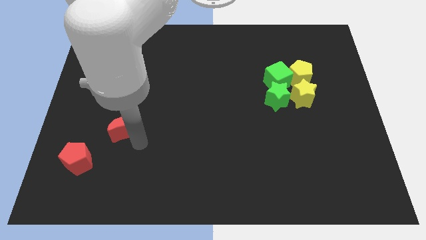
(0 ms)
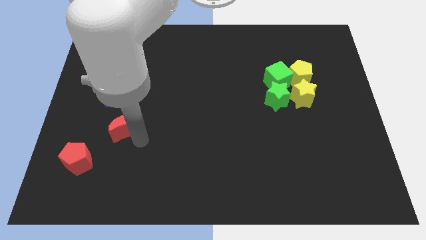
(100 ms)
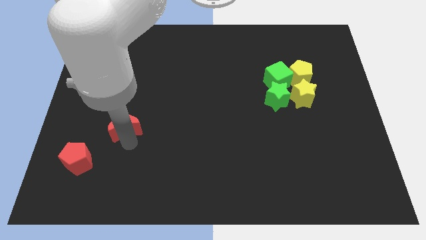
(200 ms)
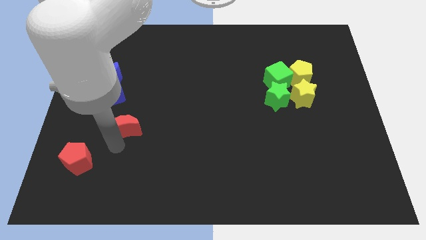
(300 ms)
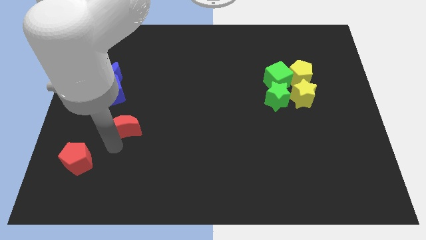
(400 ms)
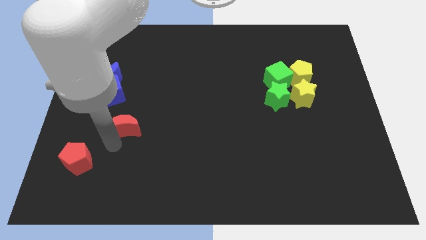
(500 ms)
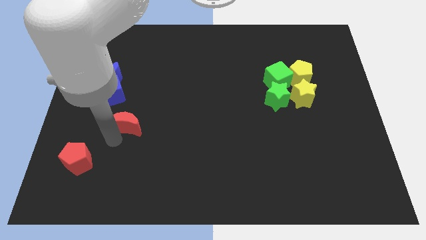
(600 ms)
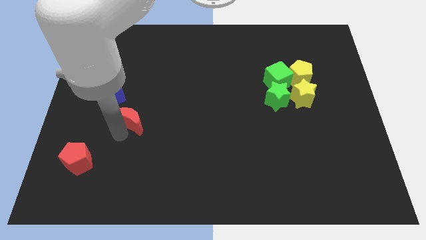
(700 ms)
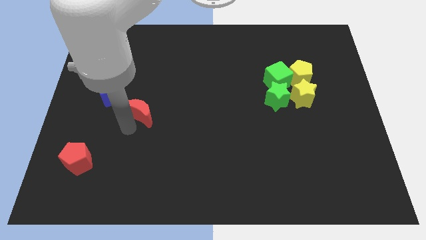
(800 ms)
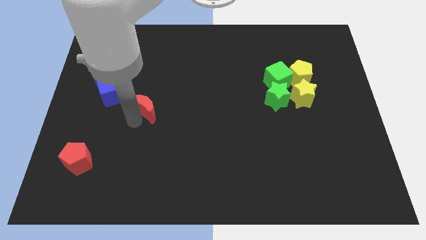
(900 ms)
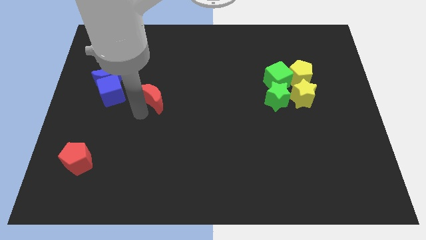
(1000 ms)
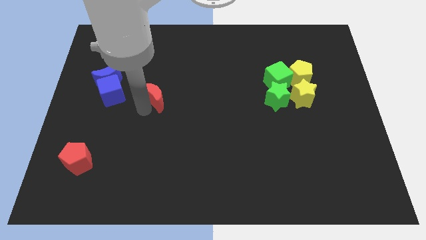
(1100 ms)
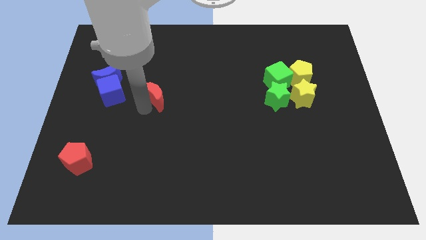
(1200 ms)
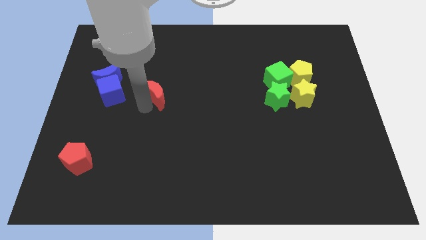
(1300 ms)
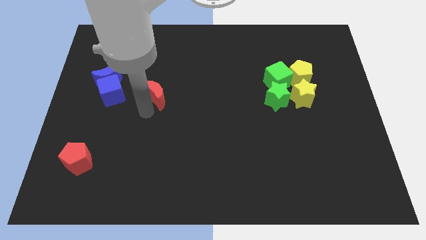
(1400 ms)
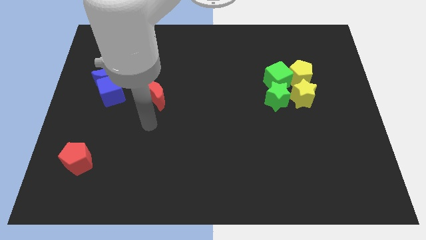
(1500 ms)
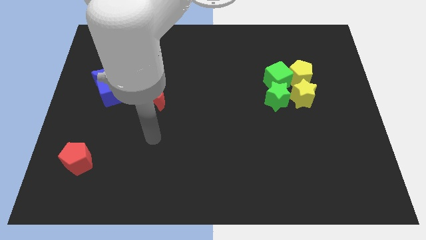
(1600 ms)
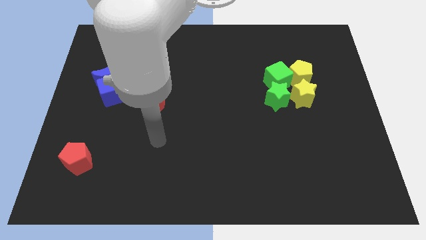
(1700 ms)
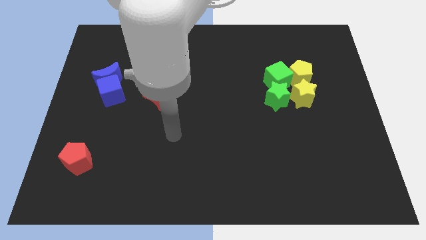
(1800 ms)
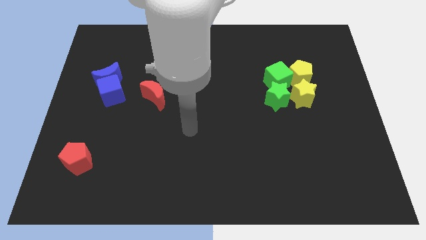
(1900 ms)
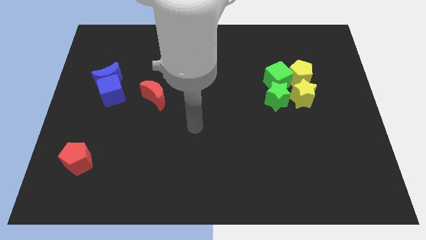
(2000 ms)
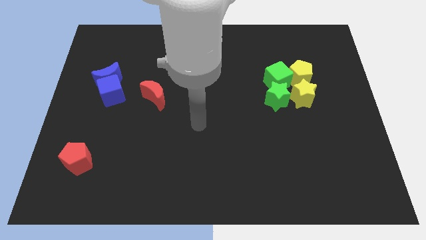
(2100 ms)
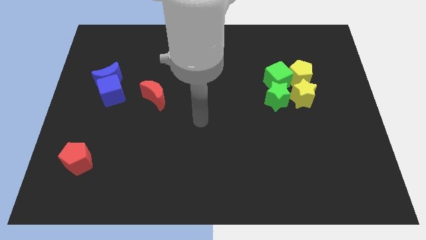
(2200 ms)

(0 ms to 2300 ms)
move the red moon to the right of blue cube

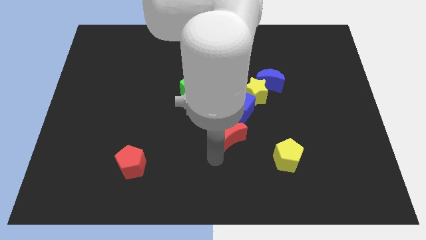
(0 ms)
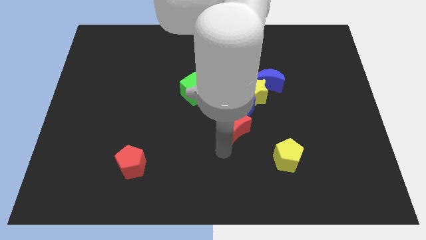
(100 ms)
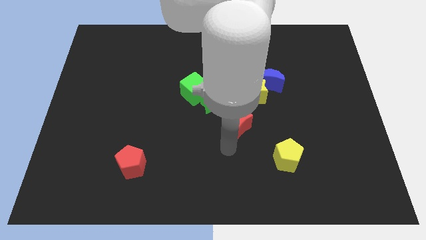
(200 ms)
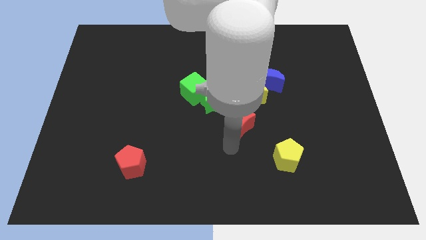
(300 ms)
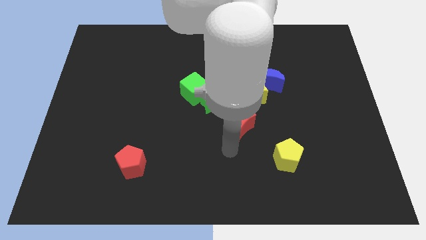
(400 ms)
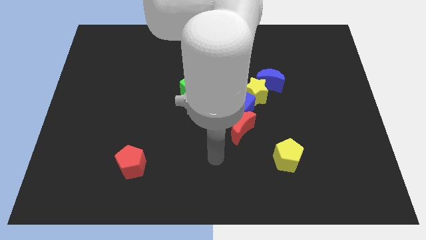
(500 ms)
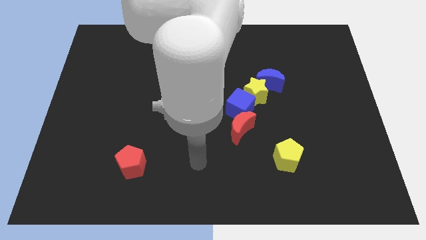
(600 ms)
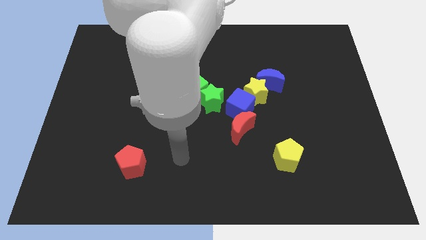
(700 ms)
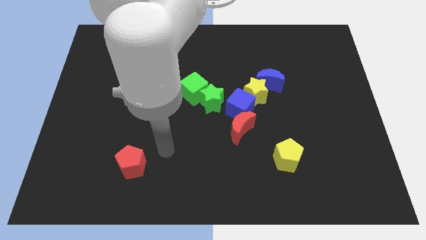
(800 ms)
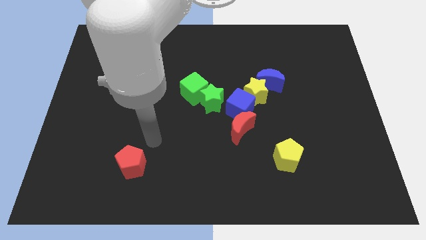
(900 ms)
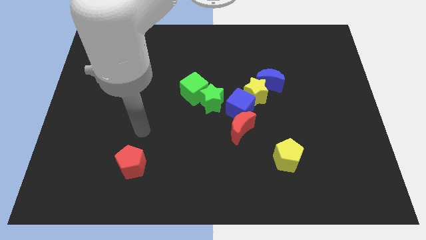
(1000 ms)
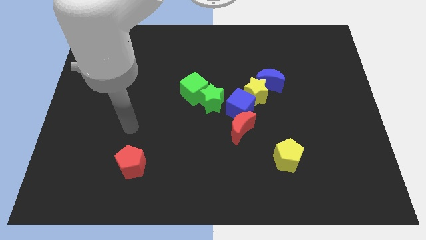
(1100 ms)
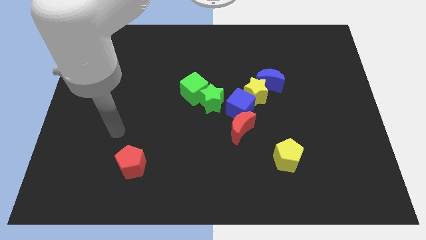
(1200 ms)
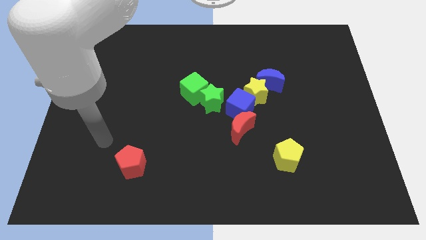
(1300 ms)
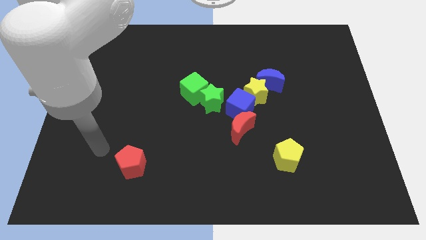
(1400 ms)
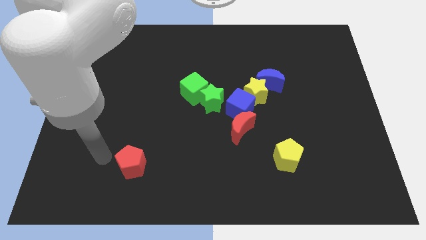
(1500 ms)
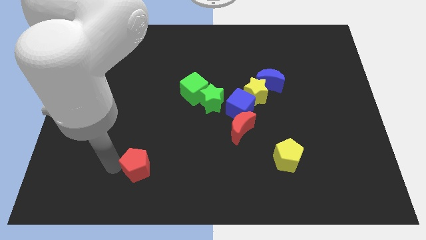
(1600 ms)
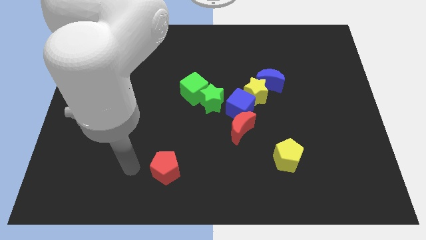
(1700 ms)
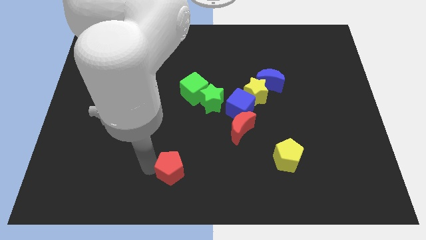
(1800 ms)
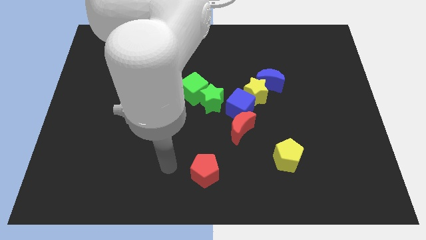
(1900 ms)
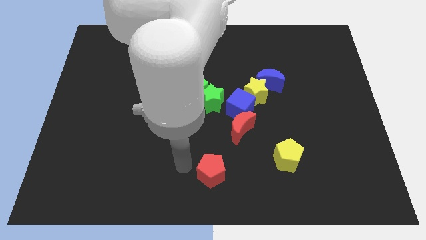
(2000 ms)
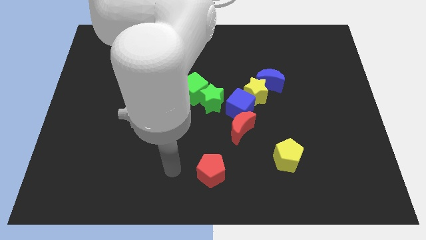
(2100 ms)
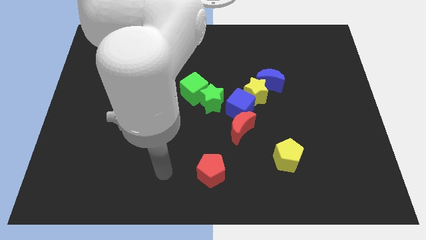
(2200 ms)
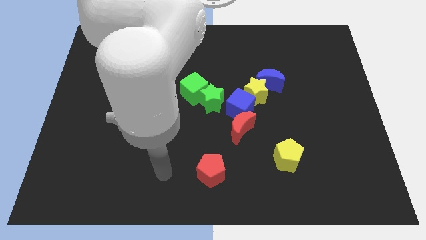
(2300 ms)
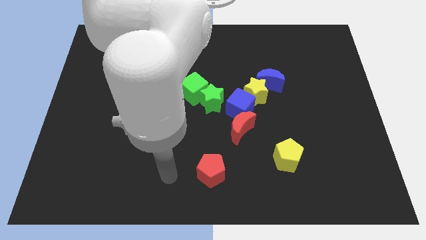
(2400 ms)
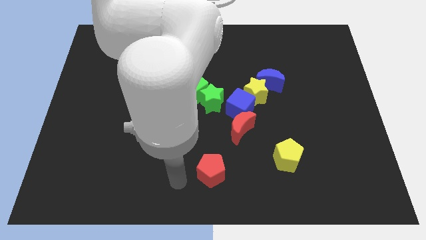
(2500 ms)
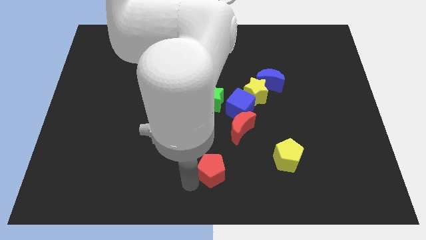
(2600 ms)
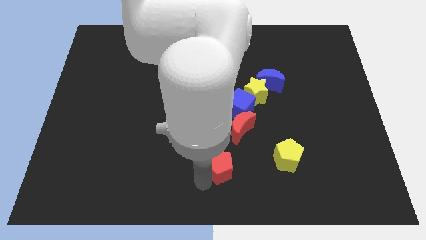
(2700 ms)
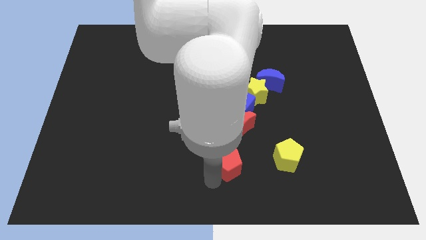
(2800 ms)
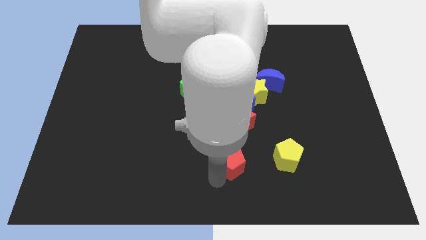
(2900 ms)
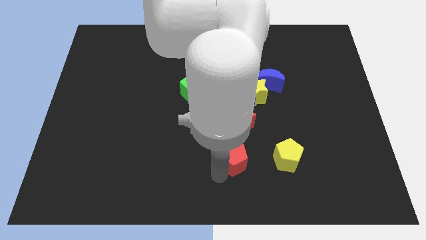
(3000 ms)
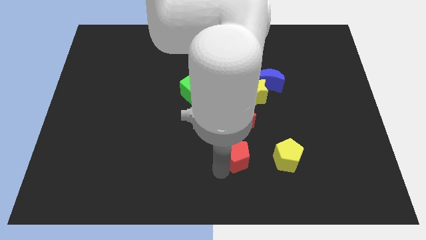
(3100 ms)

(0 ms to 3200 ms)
push the red pentagon vertically at the bottom of the red moon

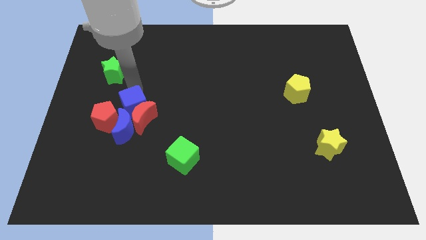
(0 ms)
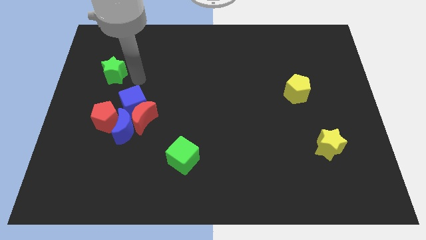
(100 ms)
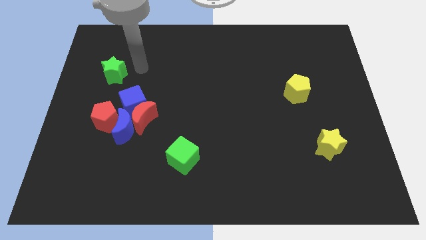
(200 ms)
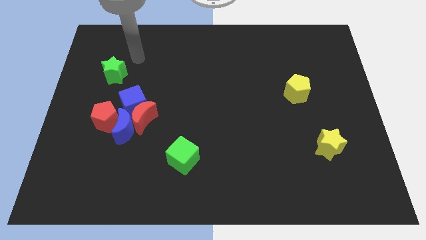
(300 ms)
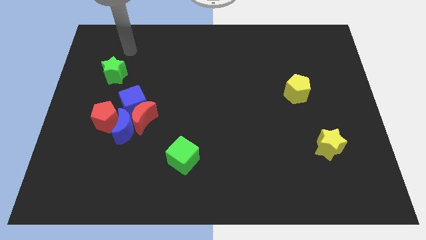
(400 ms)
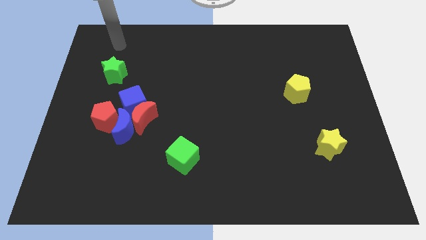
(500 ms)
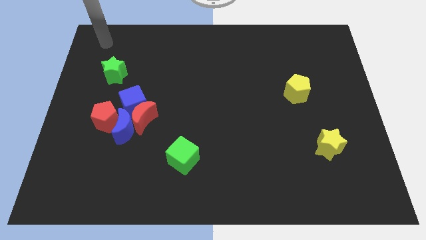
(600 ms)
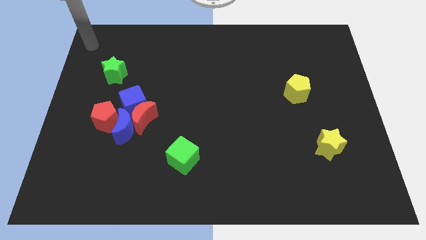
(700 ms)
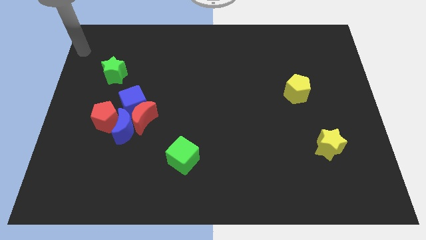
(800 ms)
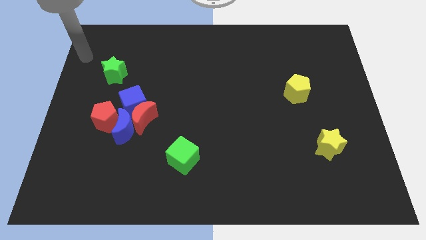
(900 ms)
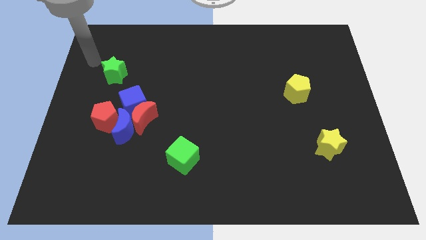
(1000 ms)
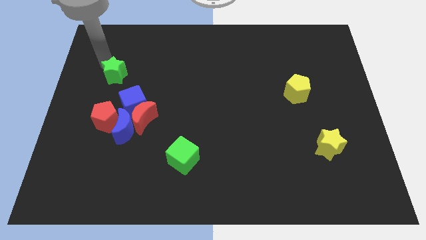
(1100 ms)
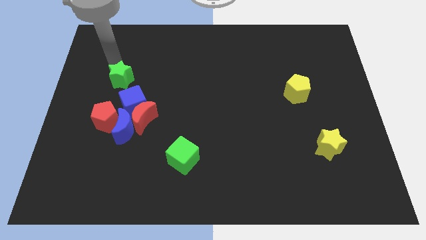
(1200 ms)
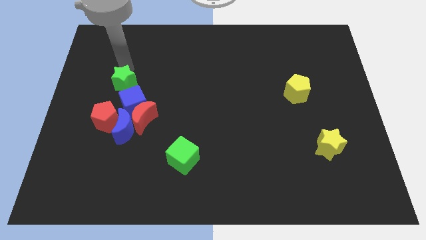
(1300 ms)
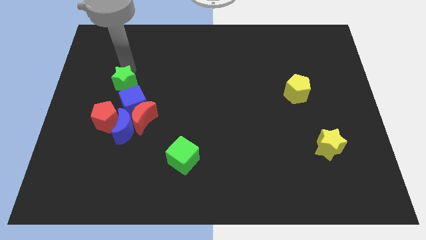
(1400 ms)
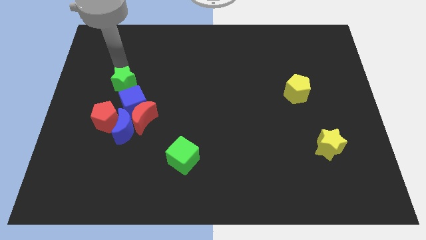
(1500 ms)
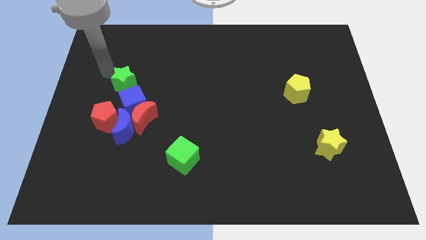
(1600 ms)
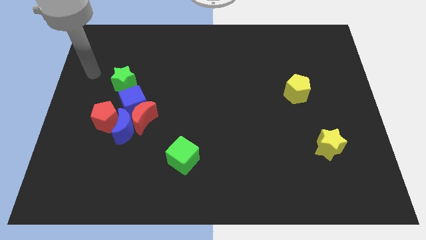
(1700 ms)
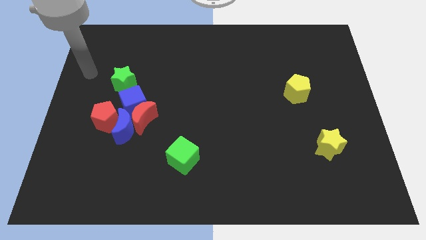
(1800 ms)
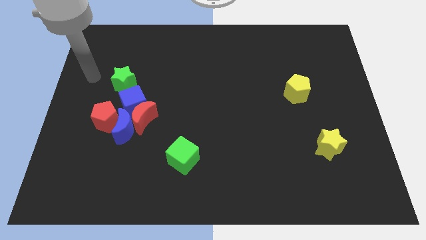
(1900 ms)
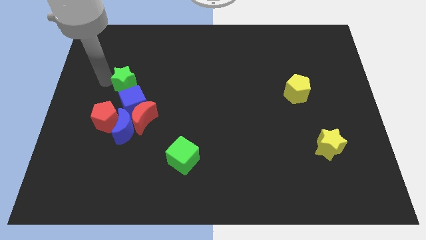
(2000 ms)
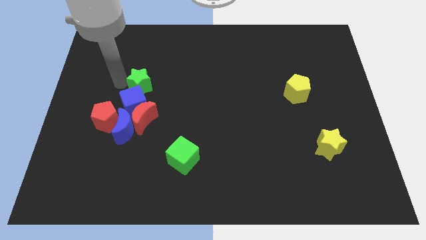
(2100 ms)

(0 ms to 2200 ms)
push the green star closer to the blue cube

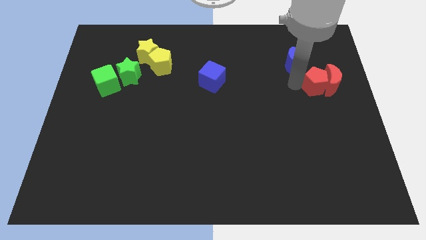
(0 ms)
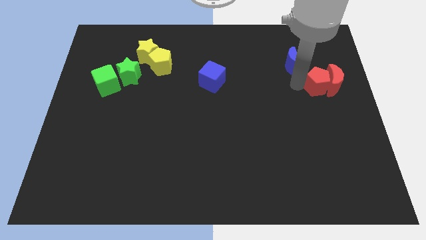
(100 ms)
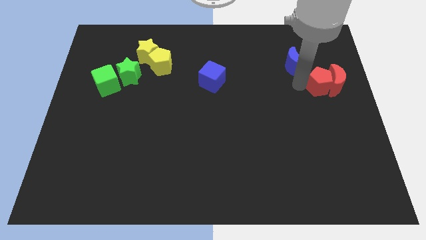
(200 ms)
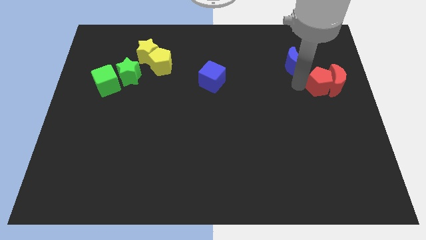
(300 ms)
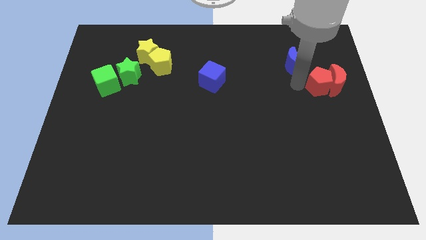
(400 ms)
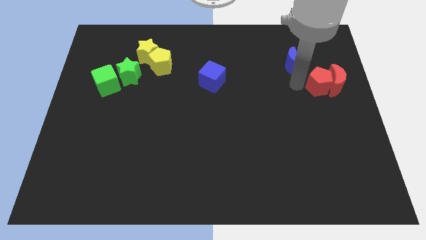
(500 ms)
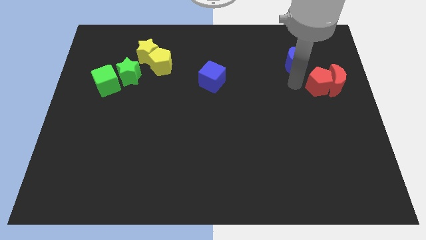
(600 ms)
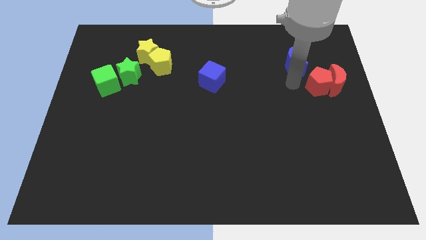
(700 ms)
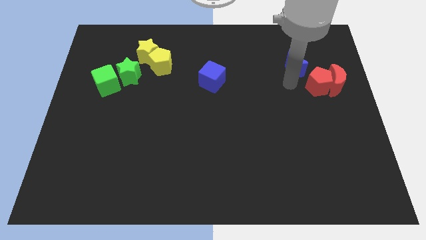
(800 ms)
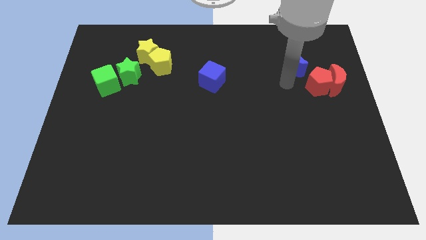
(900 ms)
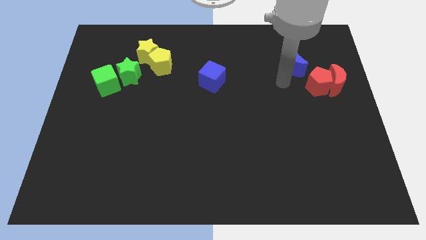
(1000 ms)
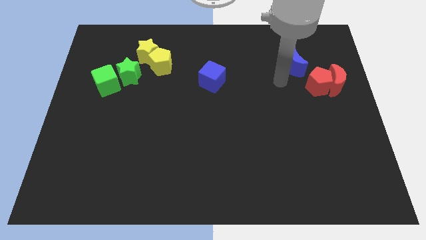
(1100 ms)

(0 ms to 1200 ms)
move the red pentagon into the red crescent
